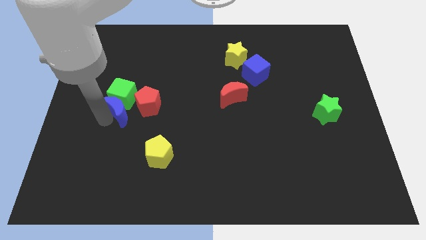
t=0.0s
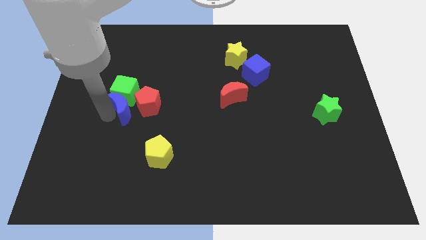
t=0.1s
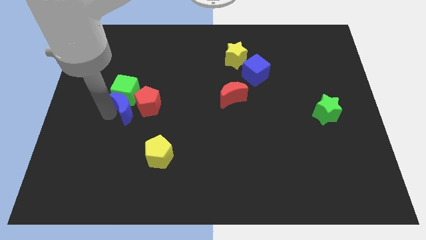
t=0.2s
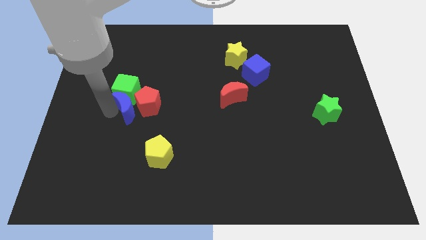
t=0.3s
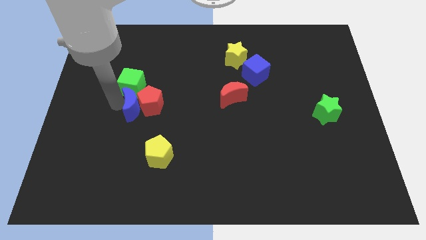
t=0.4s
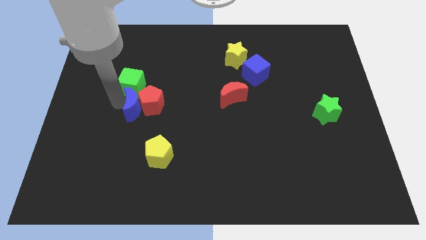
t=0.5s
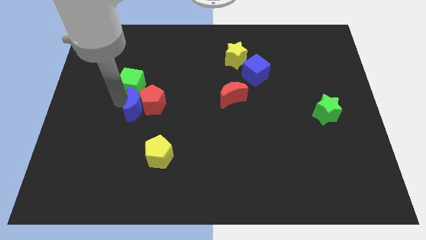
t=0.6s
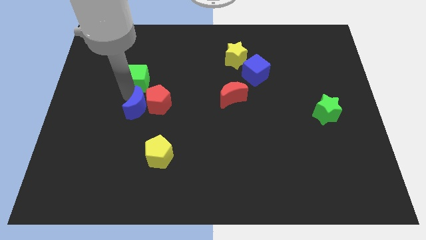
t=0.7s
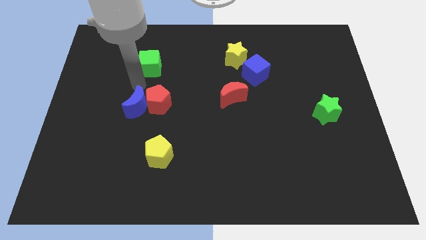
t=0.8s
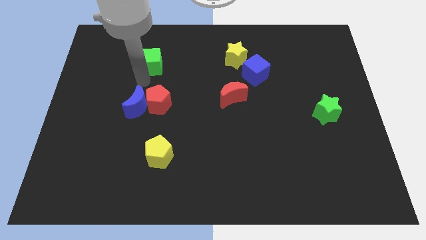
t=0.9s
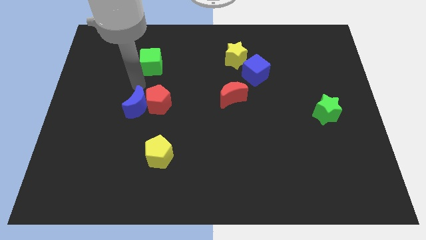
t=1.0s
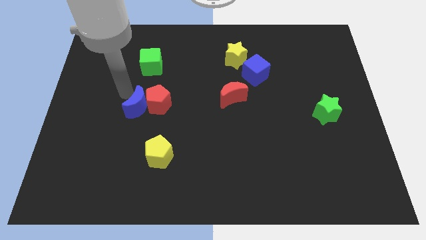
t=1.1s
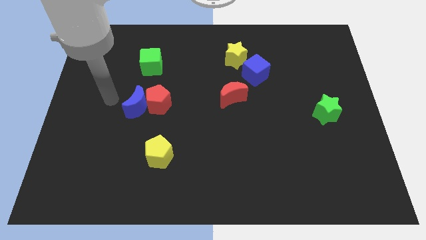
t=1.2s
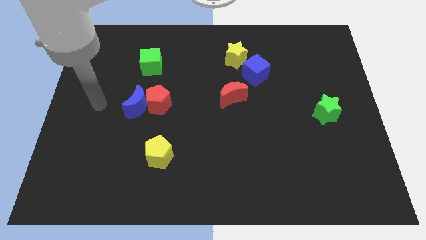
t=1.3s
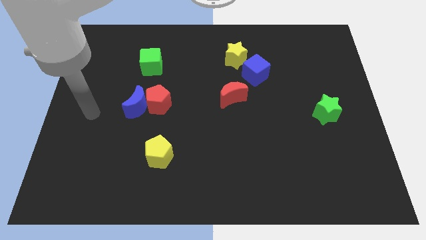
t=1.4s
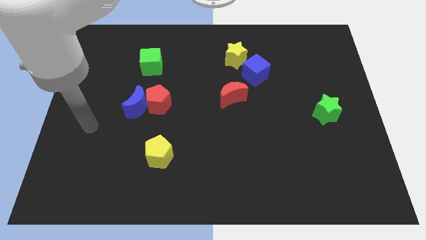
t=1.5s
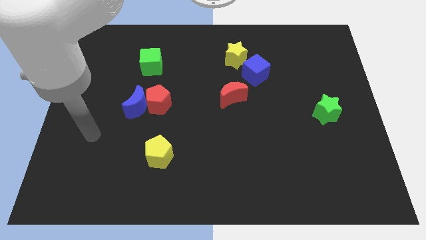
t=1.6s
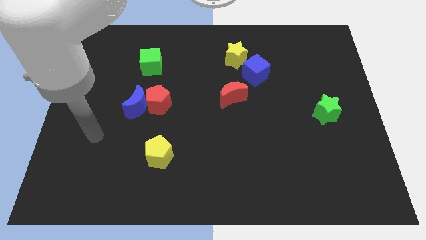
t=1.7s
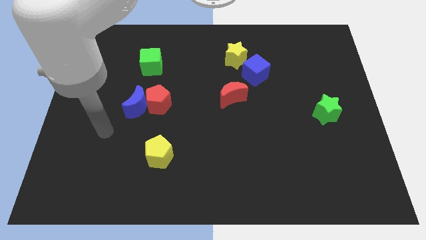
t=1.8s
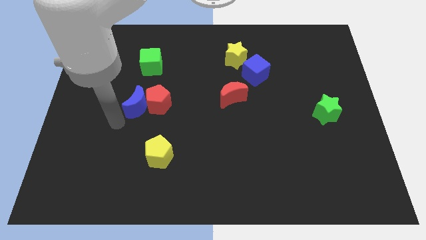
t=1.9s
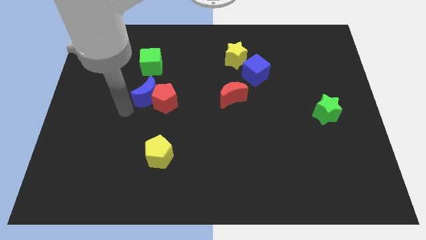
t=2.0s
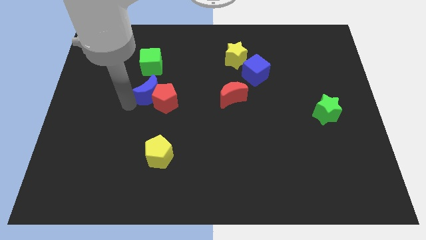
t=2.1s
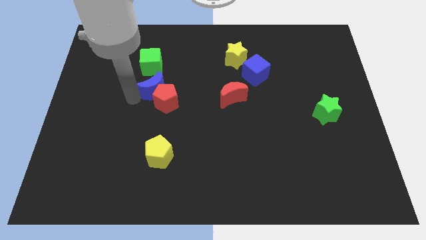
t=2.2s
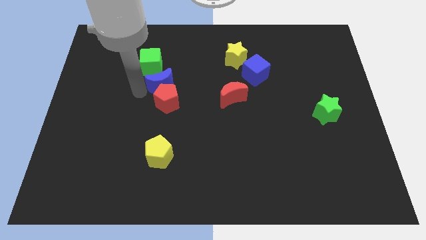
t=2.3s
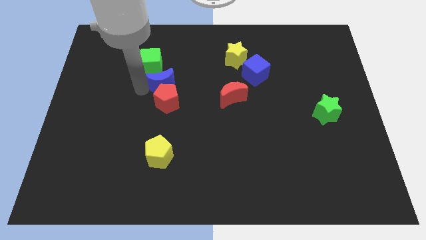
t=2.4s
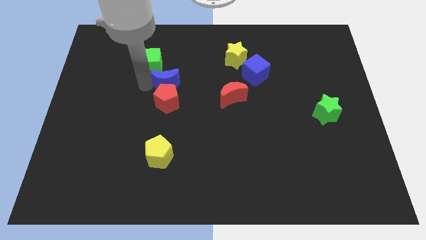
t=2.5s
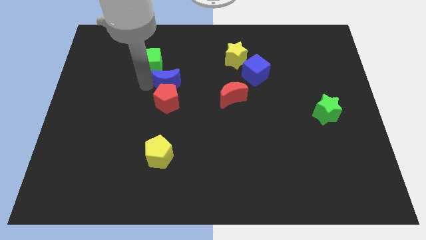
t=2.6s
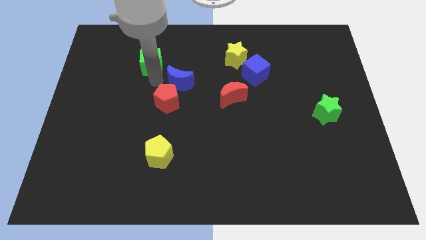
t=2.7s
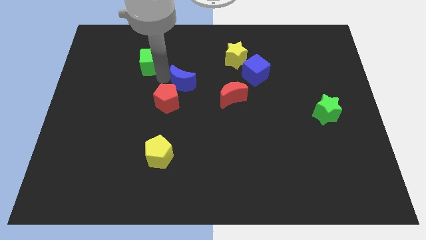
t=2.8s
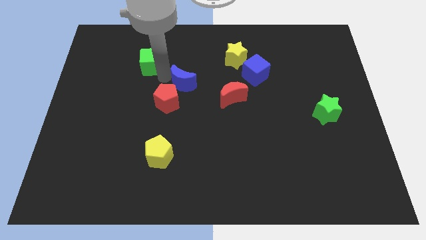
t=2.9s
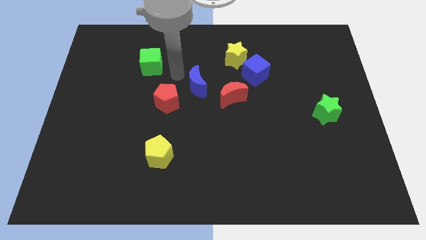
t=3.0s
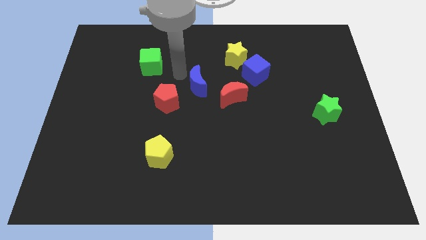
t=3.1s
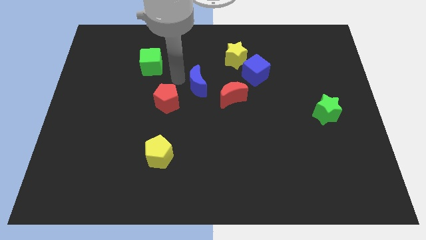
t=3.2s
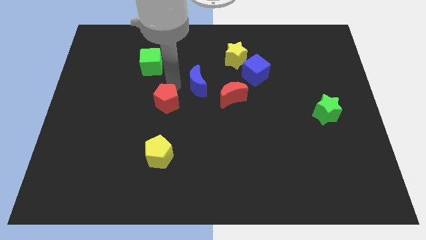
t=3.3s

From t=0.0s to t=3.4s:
push blue moon to the top right of the red pentagon

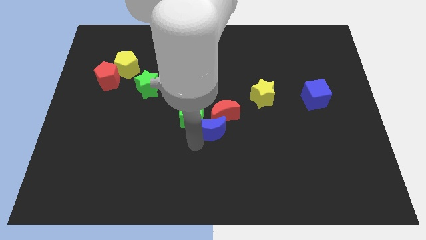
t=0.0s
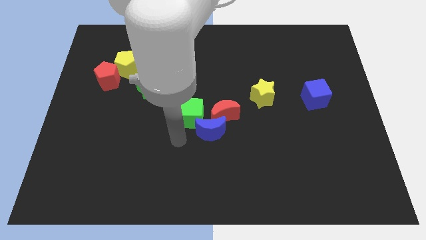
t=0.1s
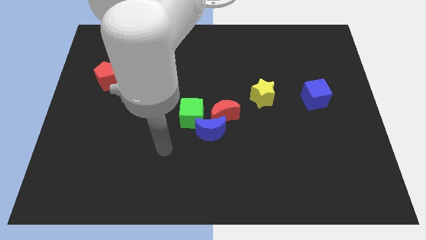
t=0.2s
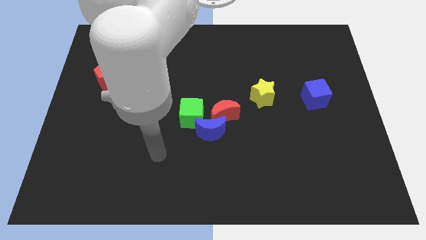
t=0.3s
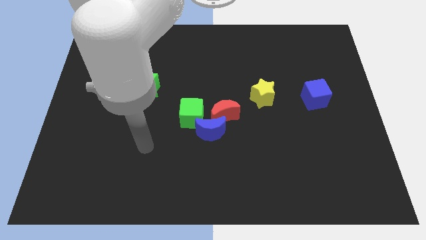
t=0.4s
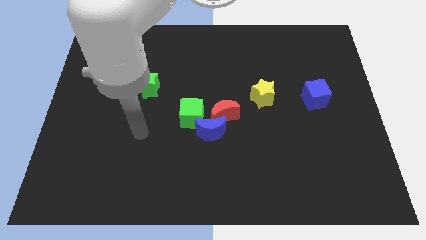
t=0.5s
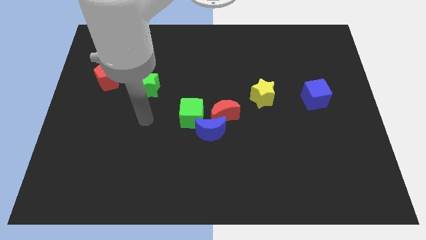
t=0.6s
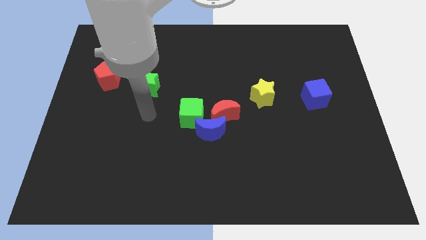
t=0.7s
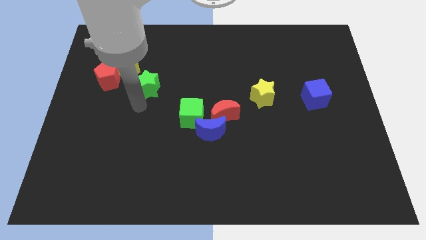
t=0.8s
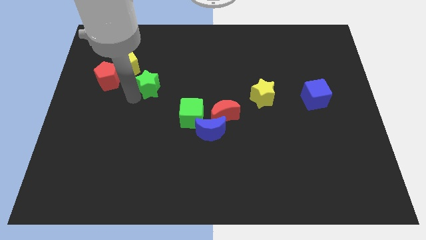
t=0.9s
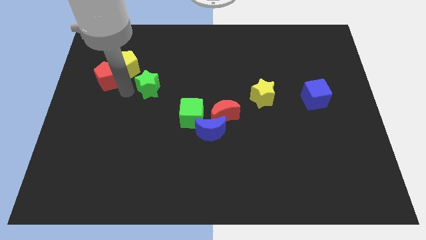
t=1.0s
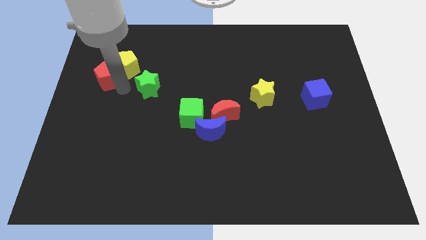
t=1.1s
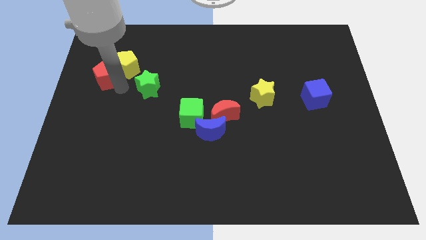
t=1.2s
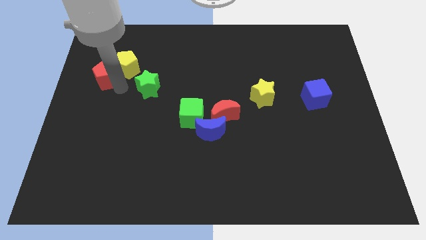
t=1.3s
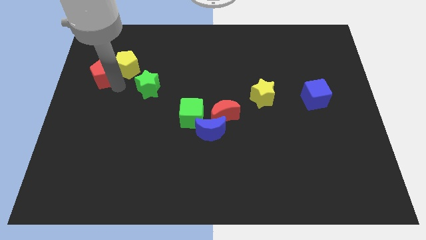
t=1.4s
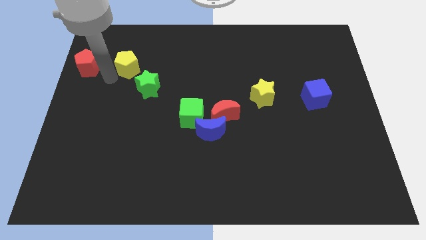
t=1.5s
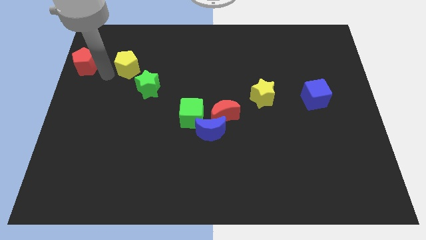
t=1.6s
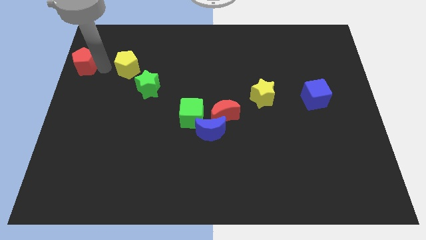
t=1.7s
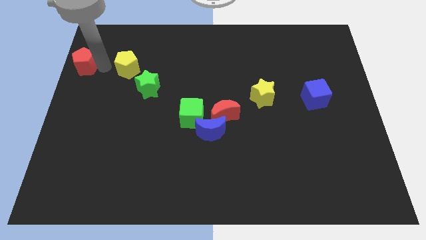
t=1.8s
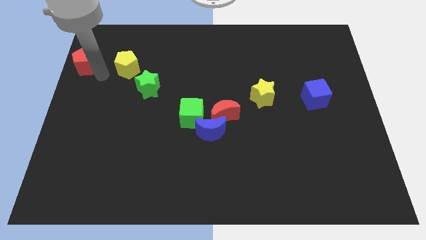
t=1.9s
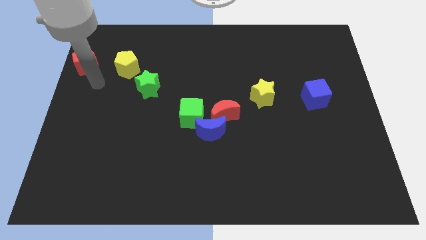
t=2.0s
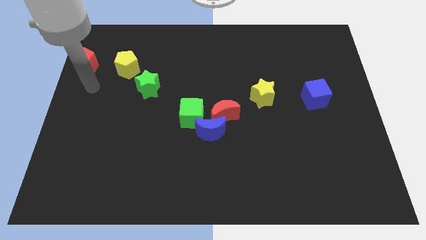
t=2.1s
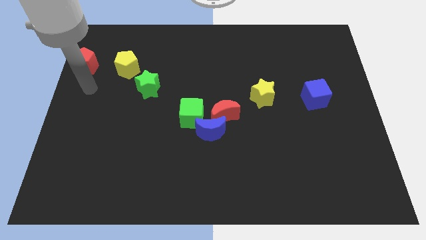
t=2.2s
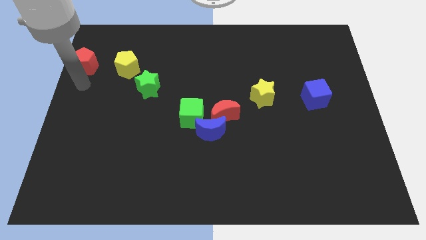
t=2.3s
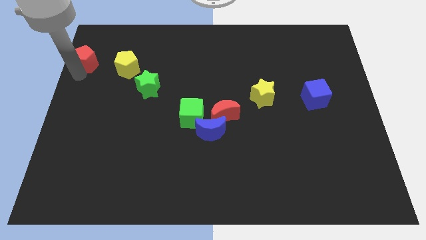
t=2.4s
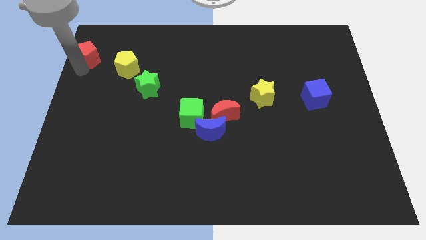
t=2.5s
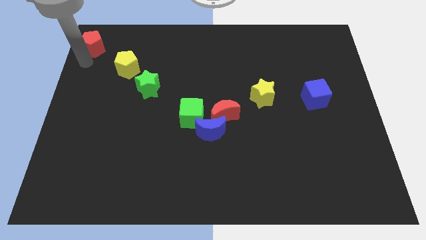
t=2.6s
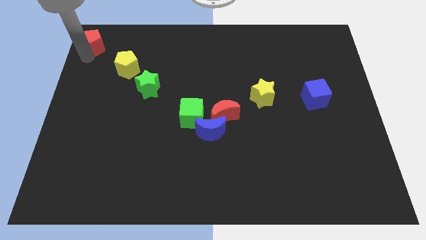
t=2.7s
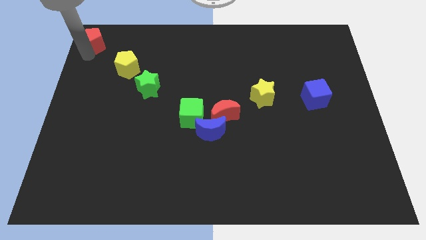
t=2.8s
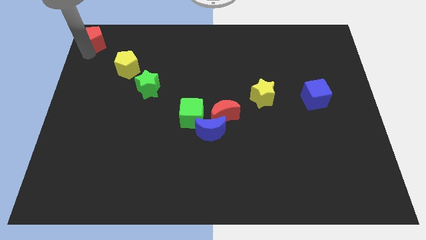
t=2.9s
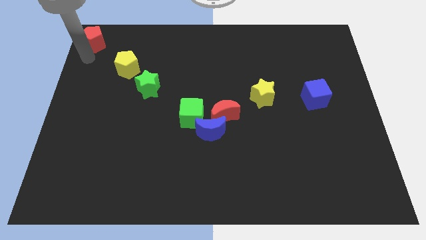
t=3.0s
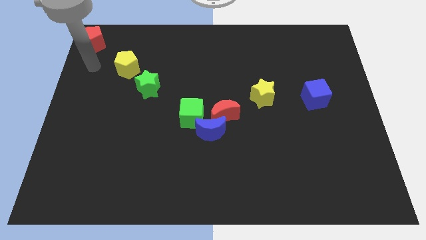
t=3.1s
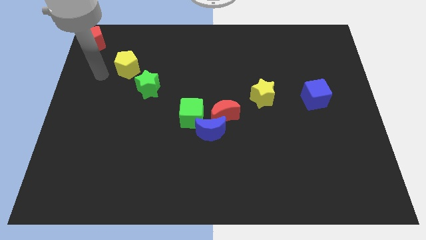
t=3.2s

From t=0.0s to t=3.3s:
push the red pentagon to the top left corner of the board

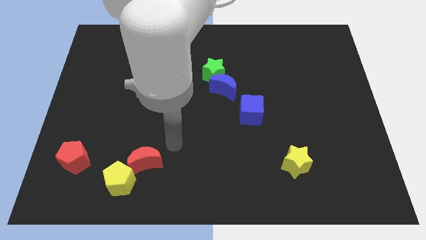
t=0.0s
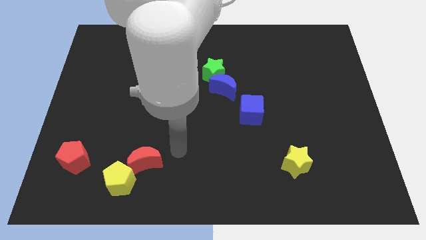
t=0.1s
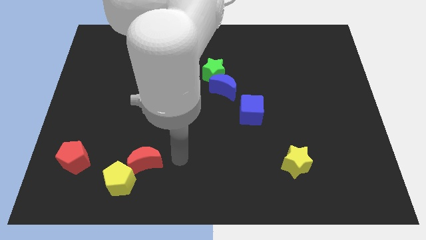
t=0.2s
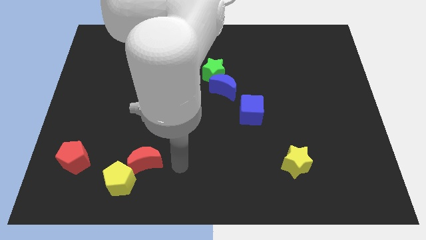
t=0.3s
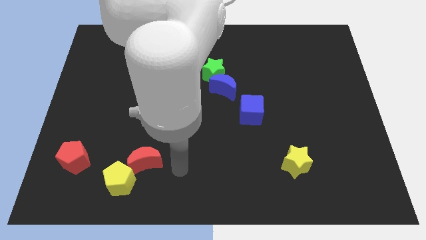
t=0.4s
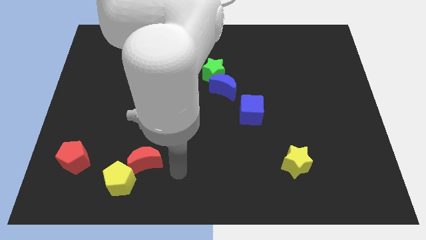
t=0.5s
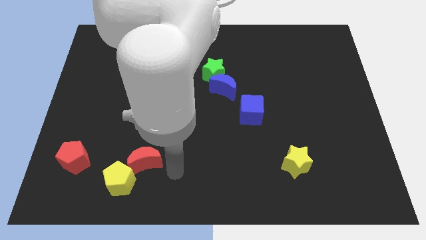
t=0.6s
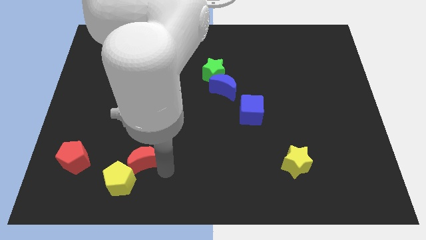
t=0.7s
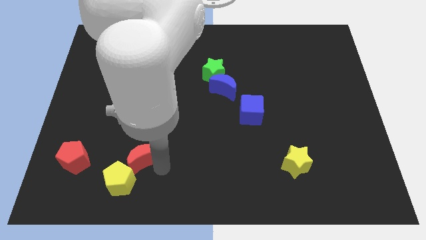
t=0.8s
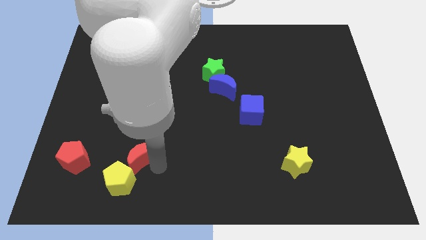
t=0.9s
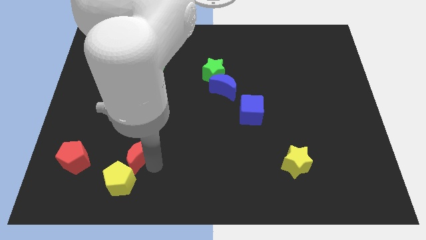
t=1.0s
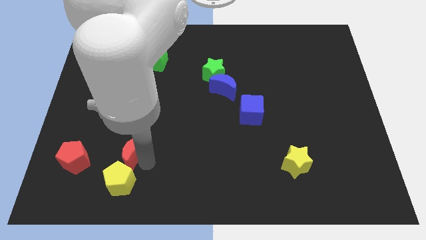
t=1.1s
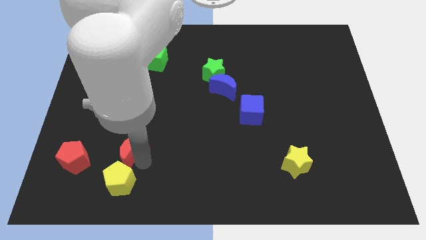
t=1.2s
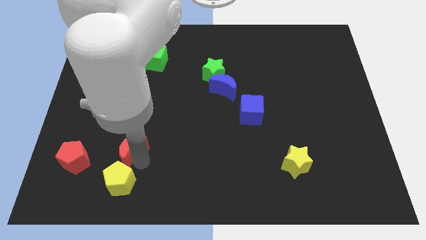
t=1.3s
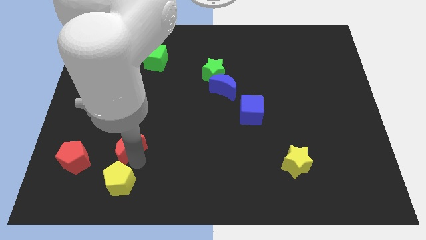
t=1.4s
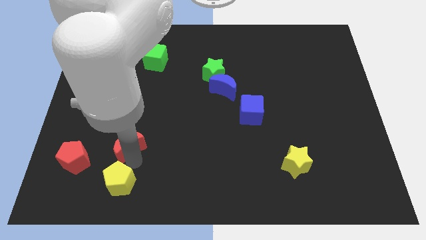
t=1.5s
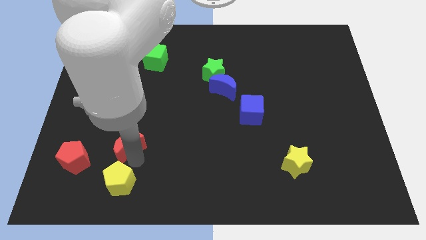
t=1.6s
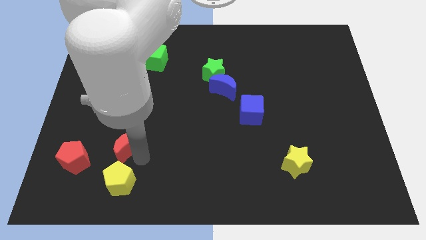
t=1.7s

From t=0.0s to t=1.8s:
push the red crescent towards the top of the yellow pentagon

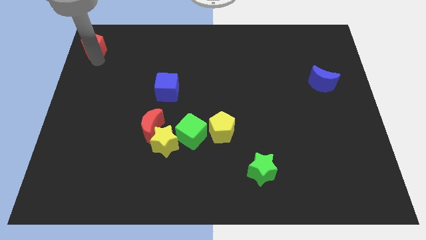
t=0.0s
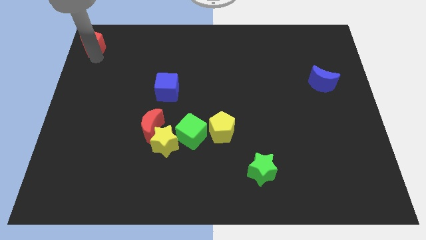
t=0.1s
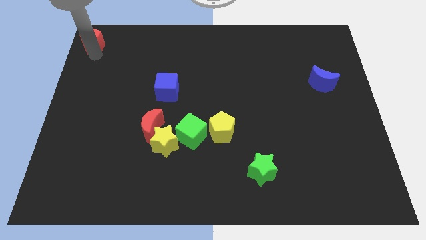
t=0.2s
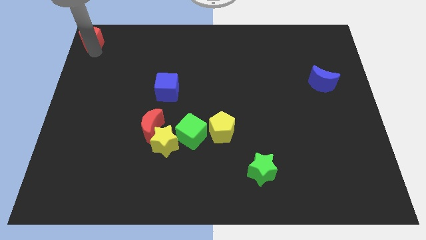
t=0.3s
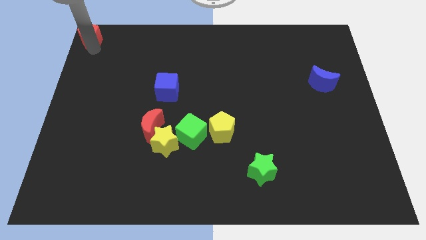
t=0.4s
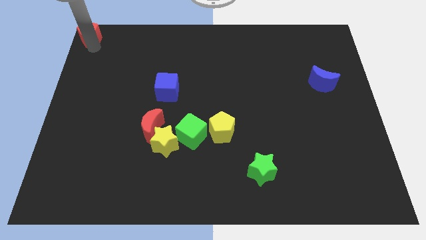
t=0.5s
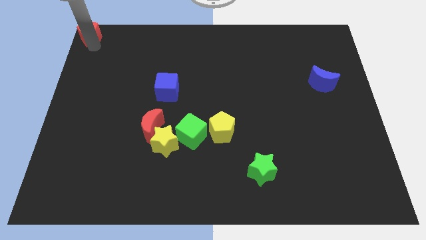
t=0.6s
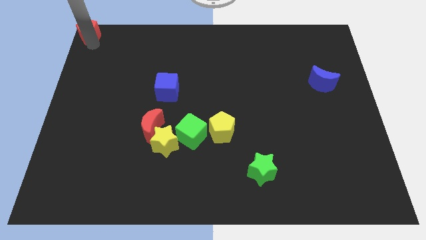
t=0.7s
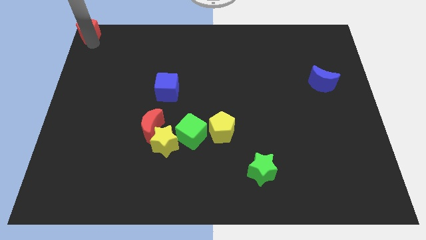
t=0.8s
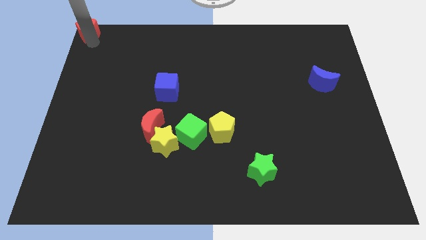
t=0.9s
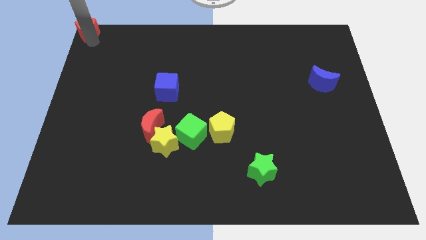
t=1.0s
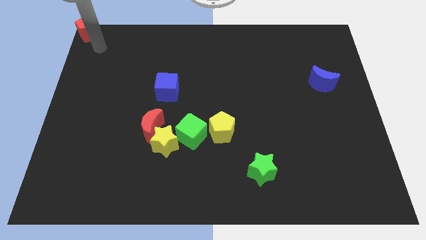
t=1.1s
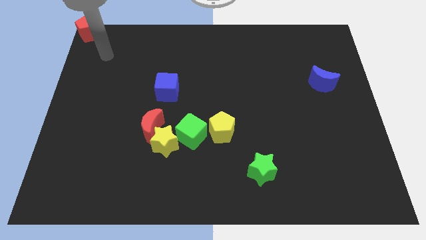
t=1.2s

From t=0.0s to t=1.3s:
push the red pentagon to the top left of the board
